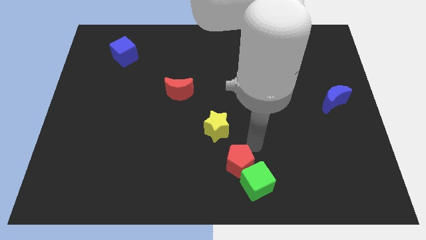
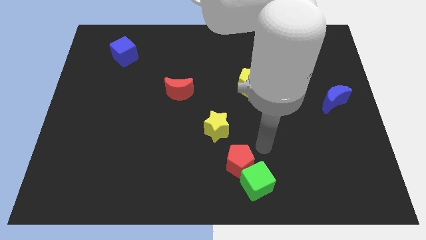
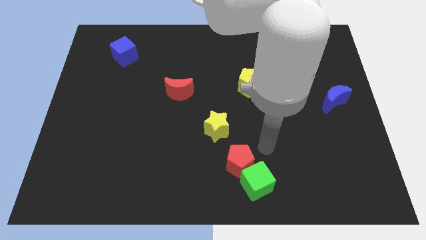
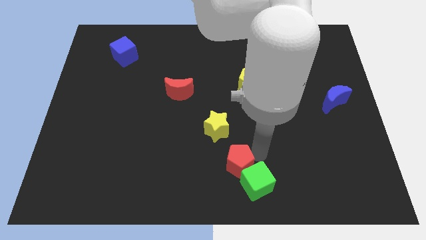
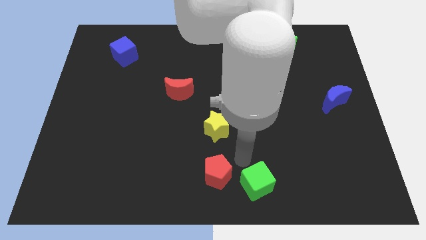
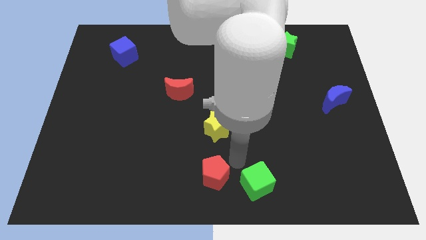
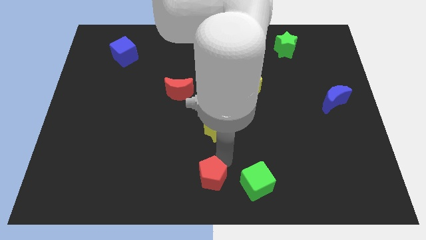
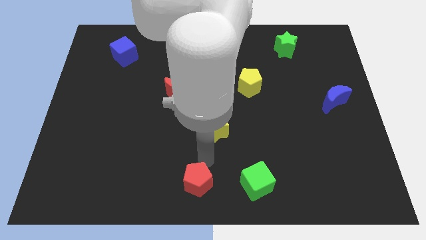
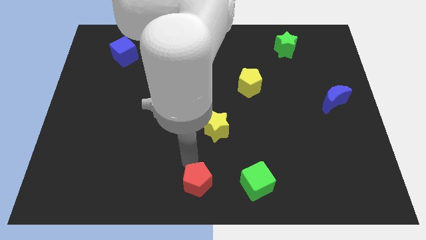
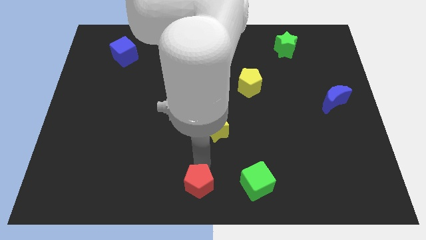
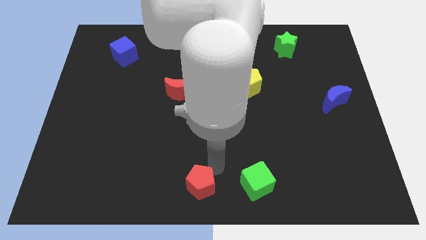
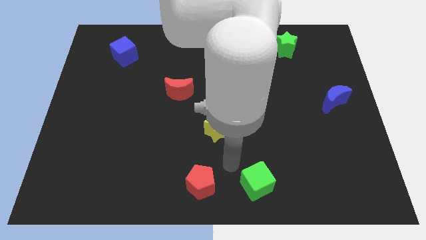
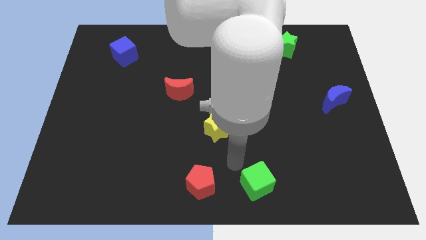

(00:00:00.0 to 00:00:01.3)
move the red pentagon to the left of the green cube

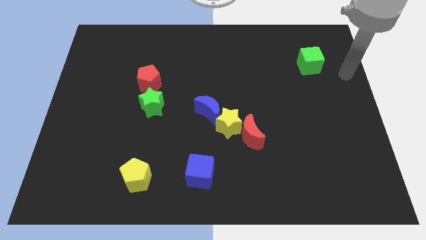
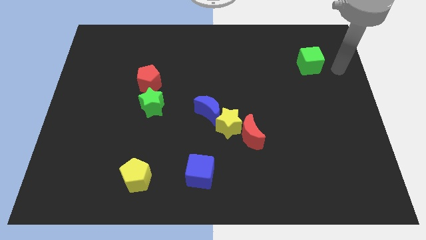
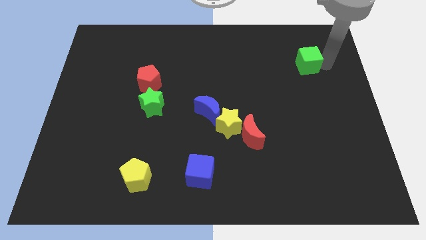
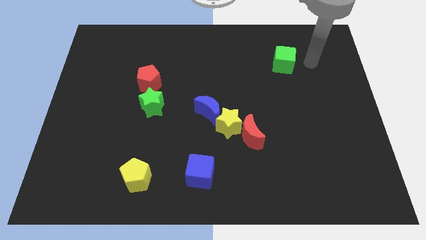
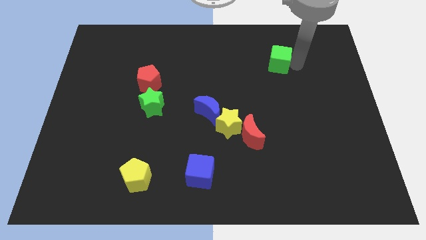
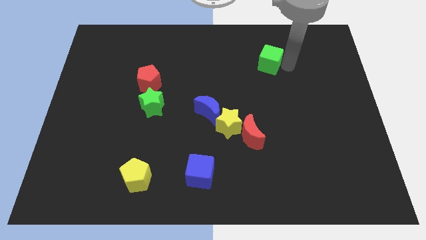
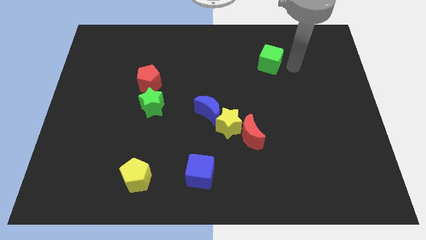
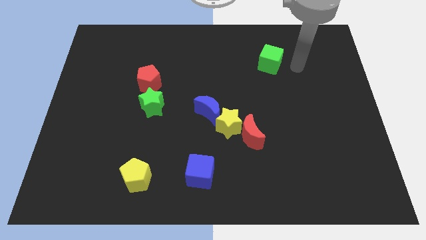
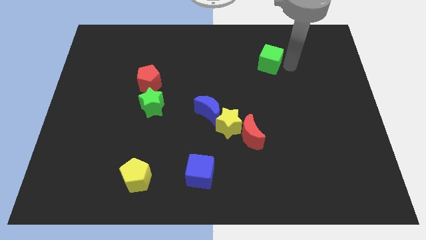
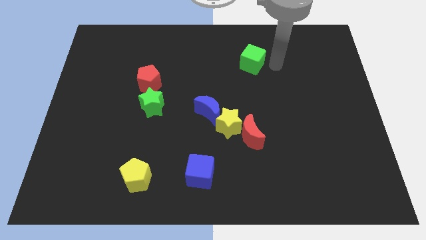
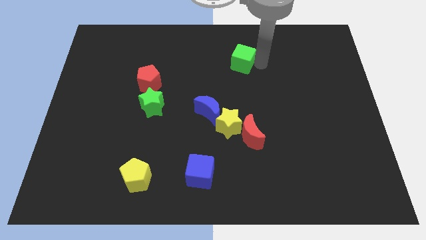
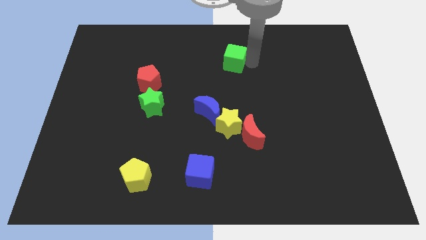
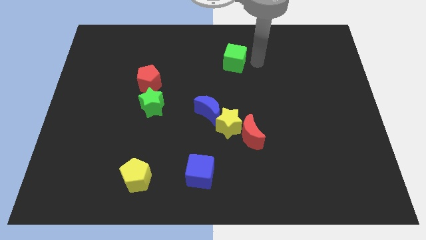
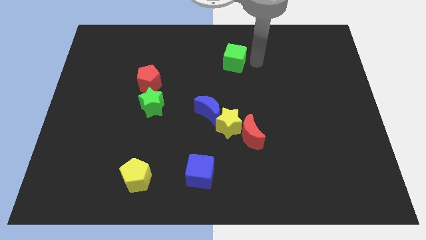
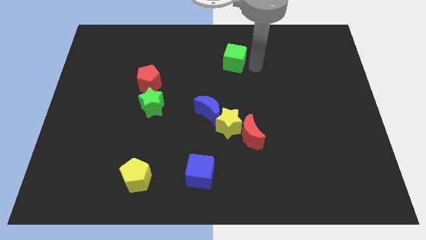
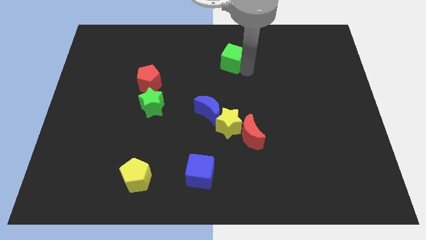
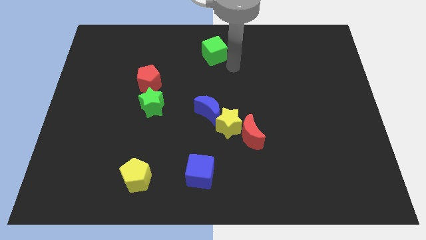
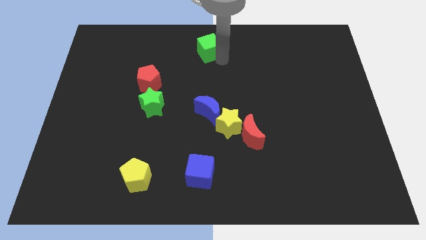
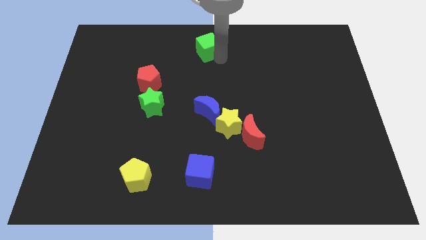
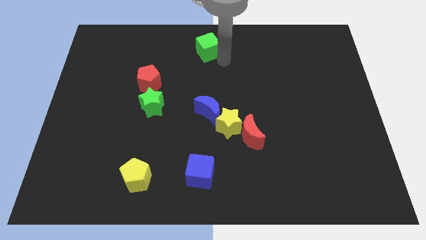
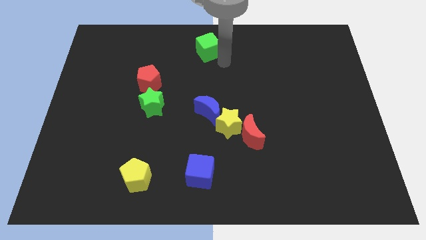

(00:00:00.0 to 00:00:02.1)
push green cube diagonal to red pentagon

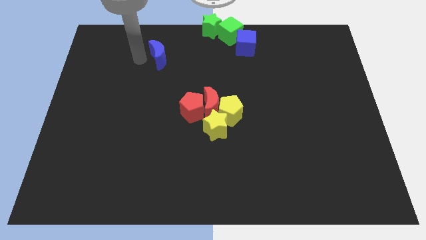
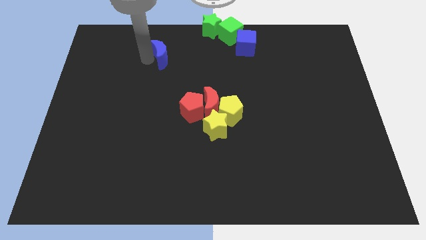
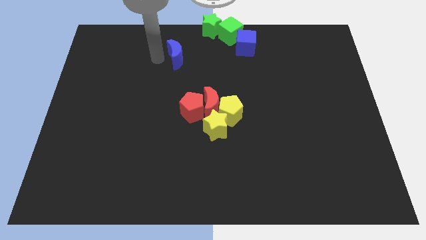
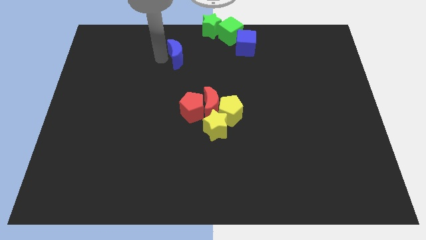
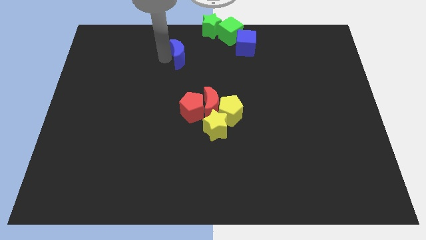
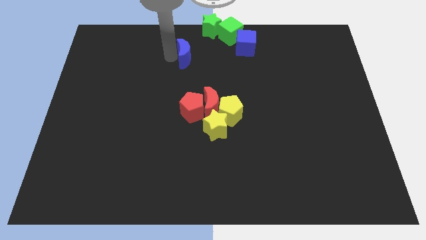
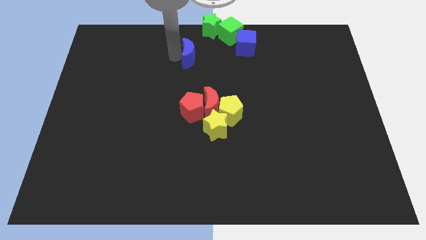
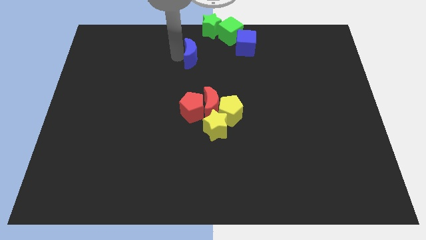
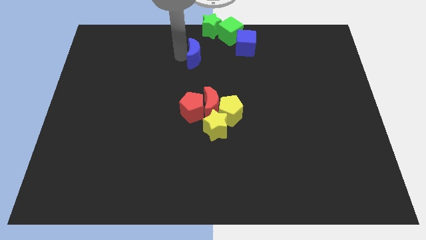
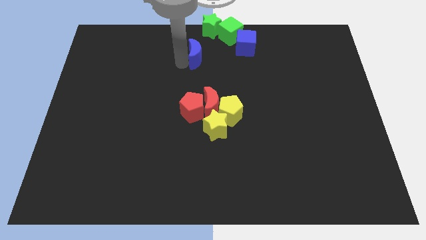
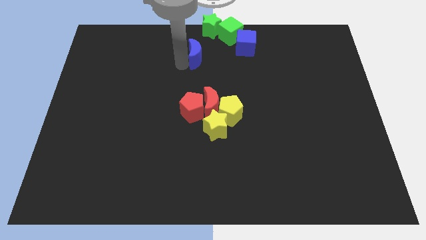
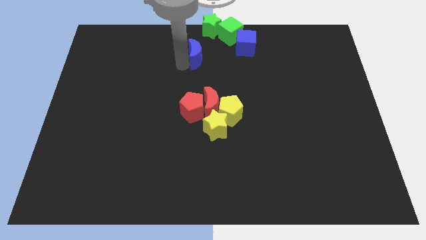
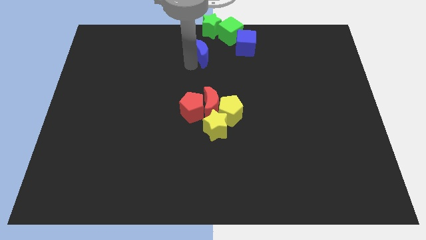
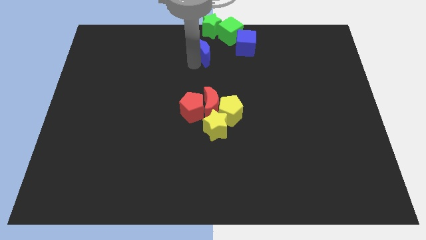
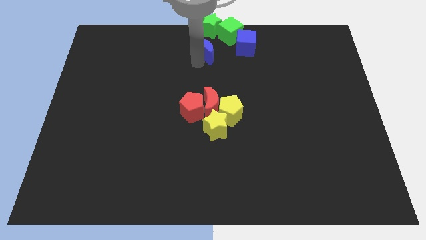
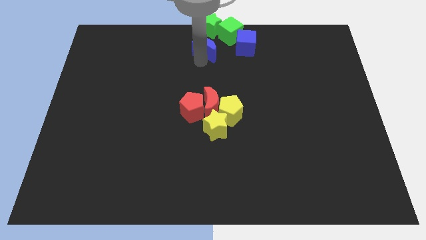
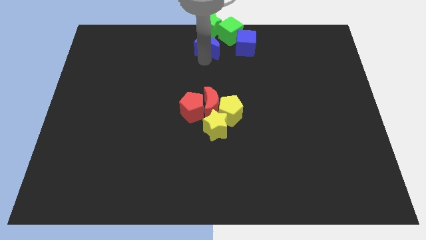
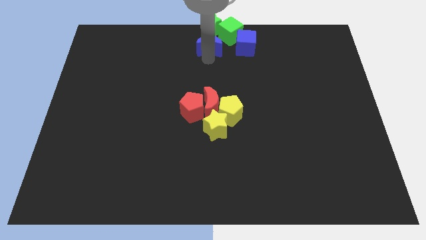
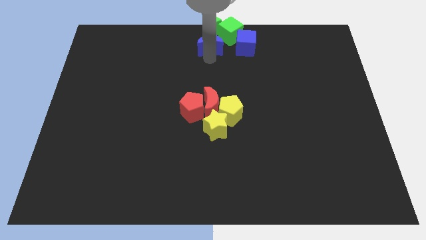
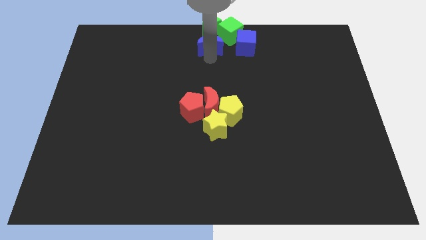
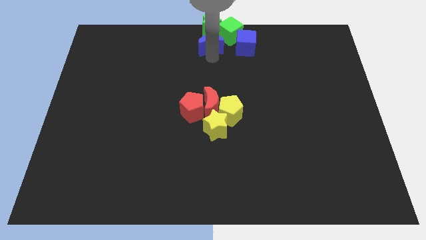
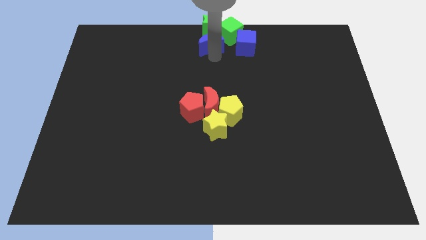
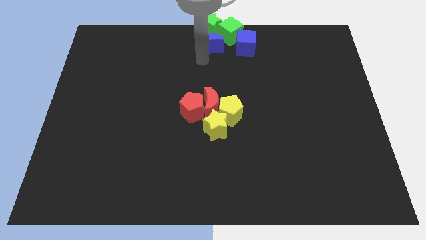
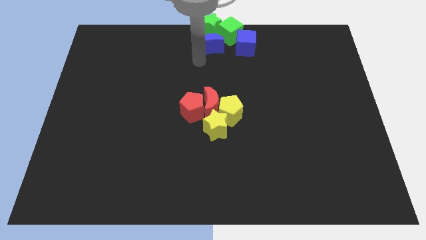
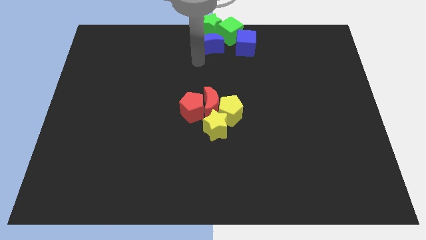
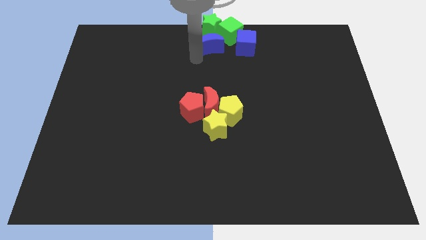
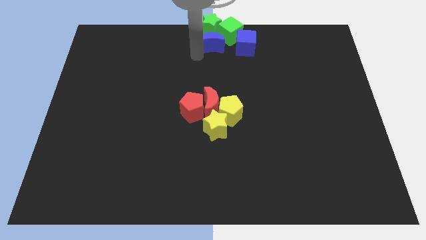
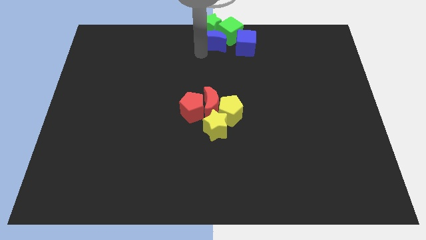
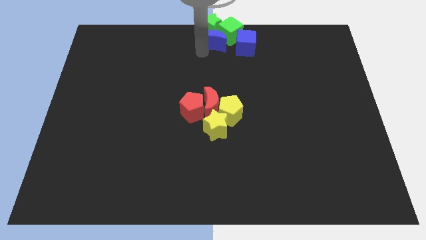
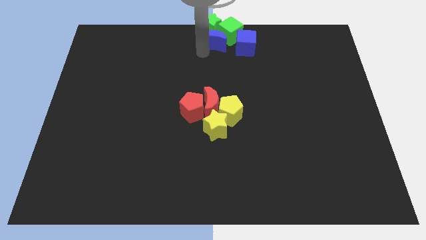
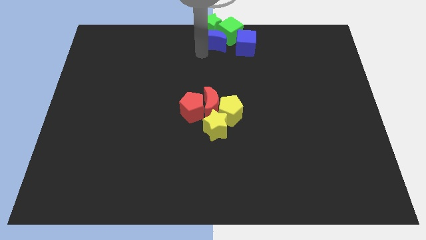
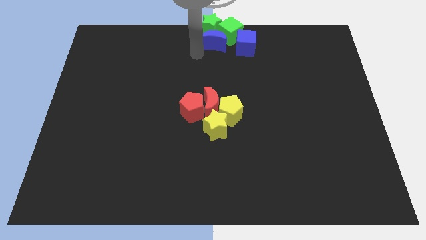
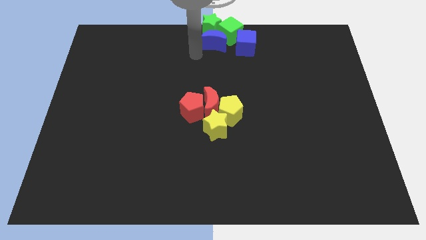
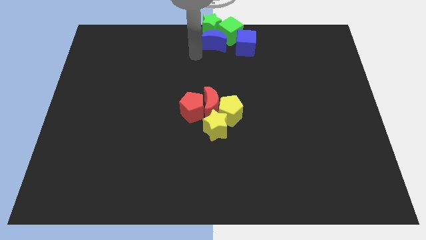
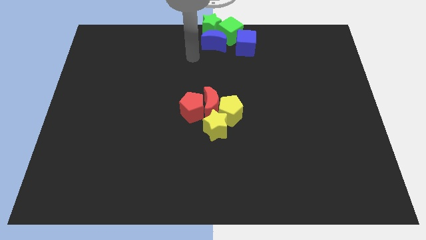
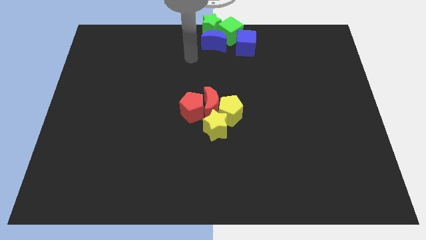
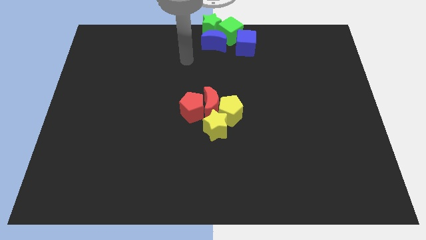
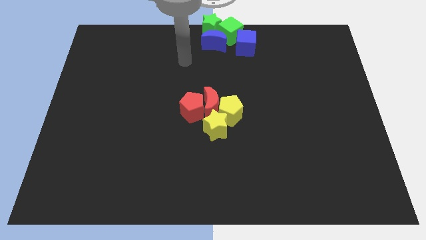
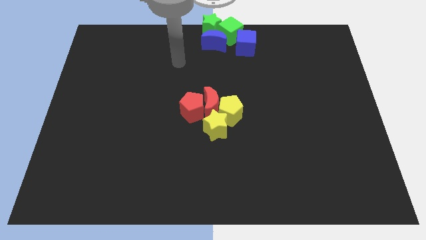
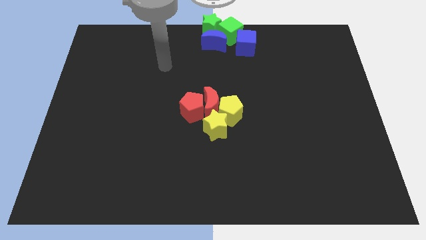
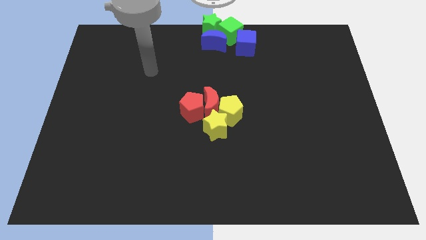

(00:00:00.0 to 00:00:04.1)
move blue moon below the green cube

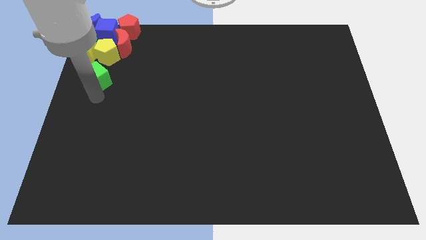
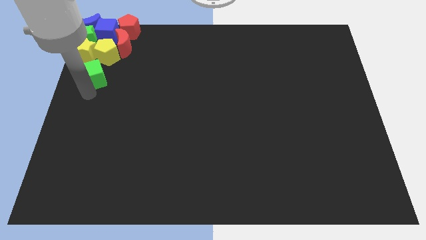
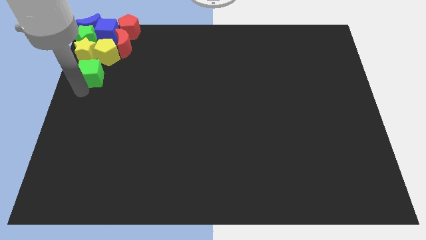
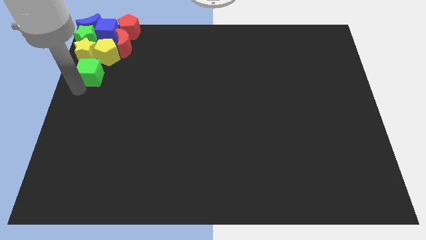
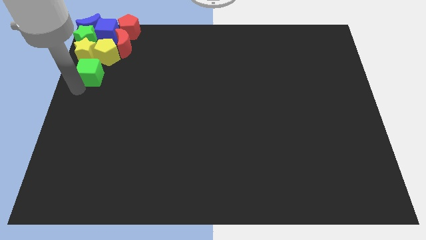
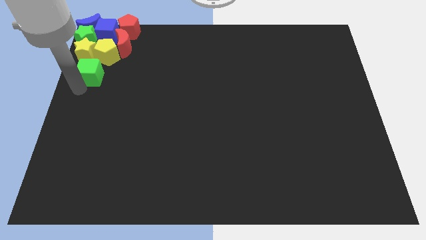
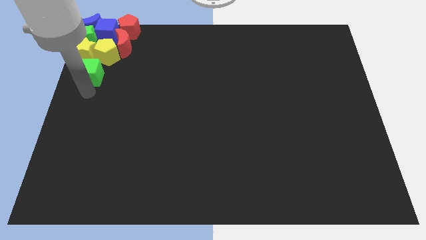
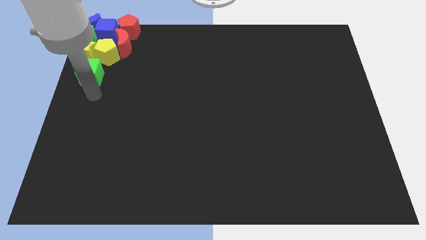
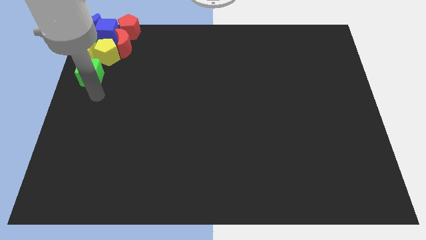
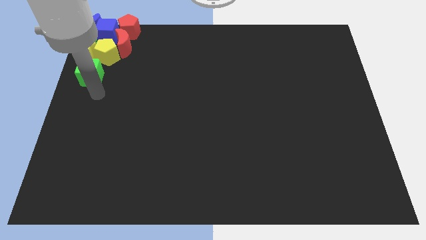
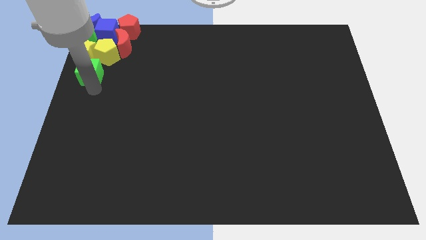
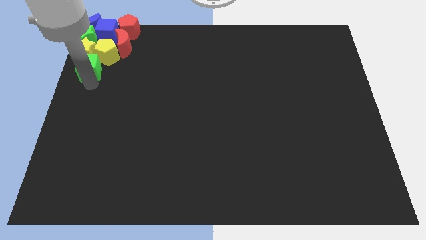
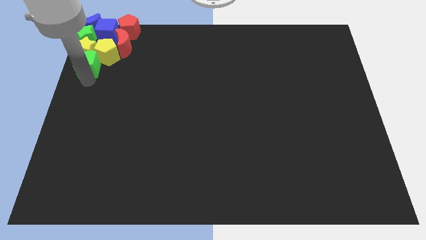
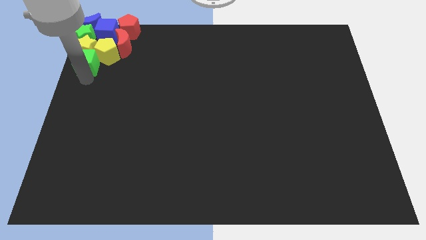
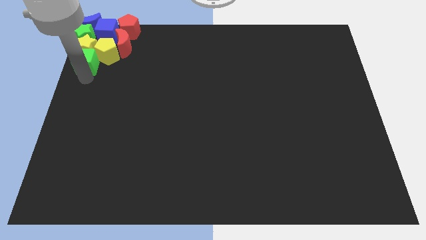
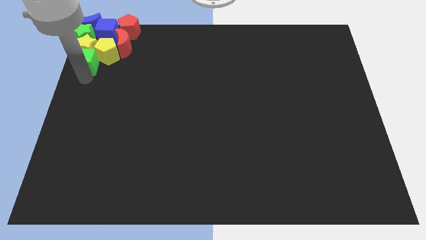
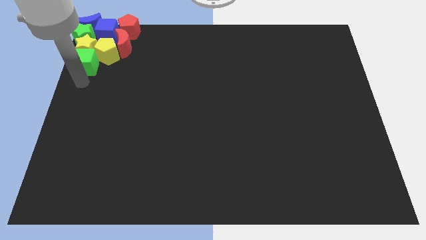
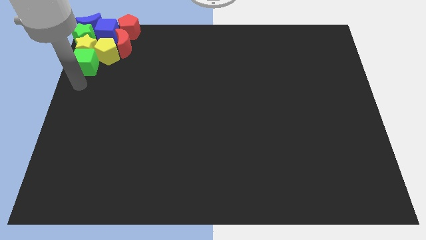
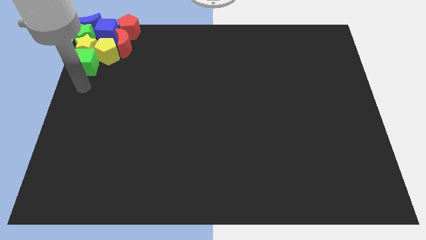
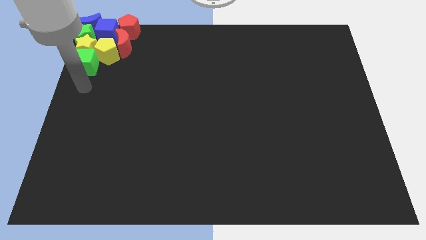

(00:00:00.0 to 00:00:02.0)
move the green cube below the yellow star
